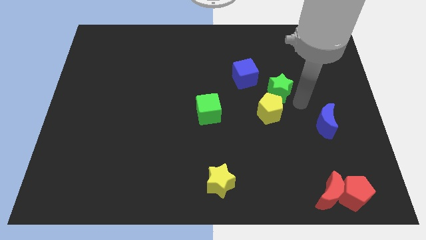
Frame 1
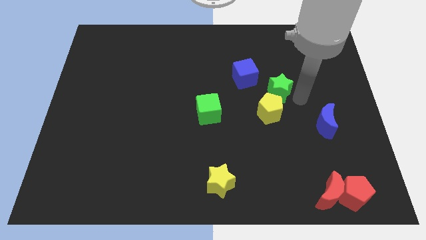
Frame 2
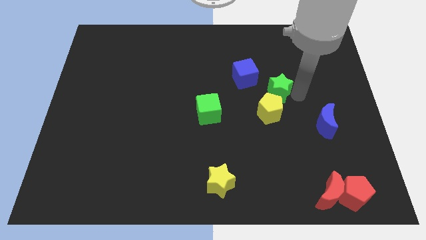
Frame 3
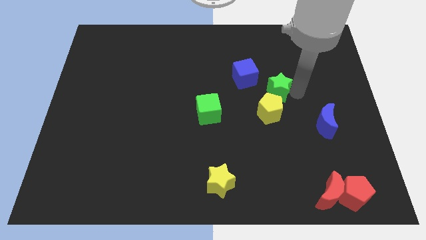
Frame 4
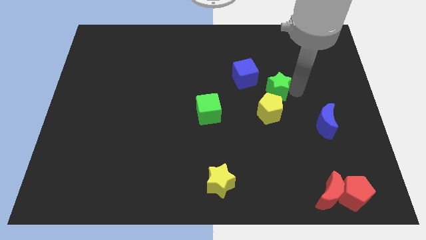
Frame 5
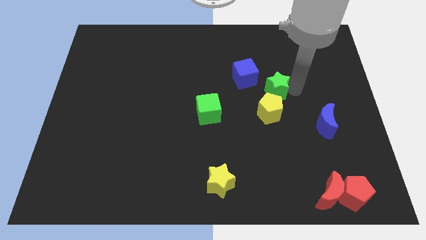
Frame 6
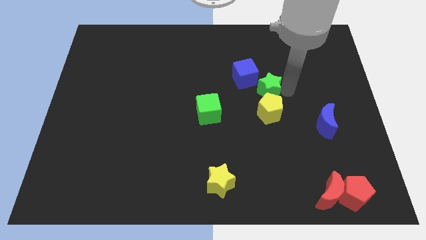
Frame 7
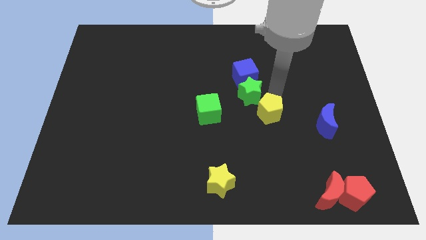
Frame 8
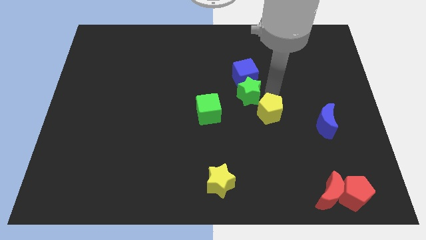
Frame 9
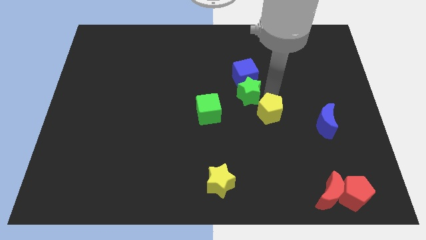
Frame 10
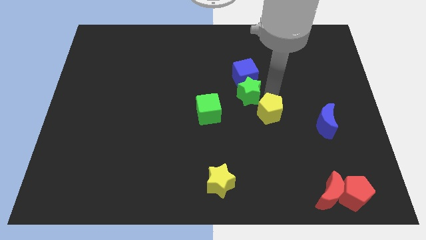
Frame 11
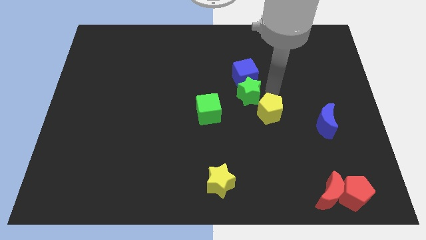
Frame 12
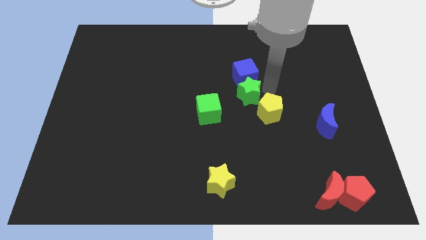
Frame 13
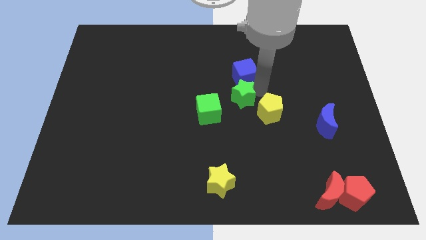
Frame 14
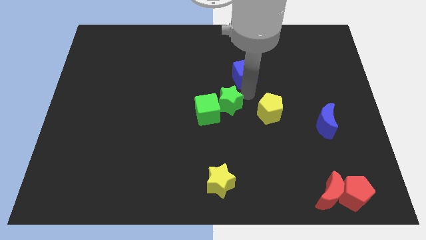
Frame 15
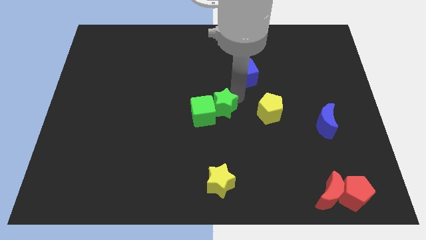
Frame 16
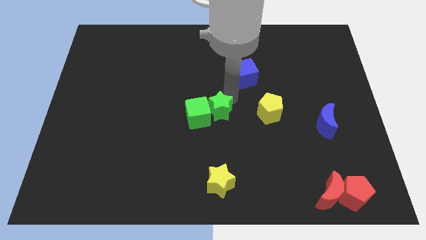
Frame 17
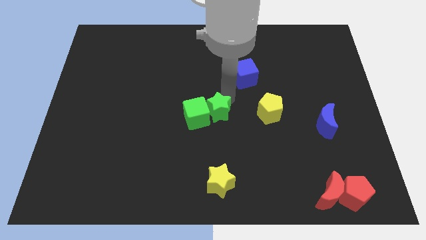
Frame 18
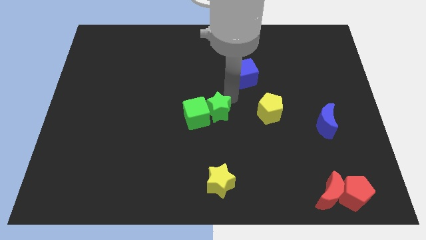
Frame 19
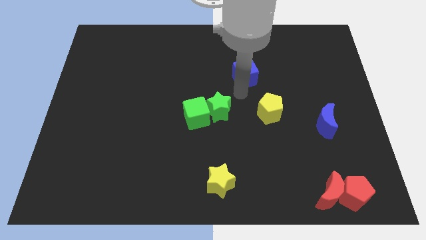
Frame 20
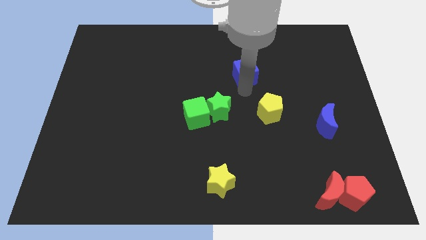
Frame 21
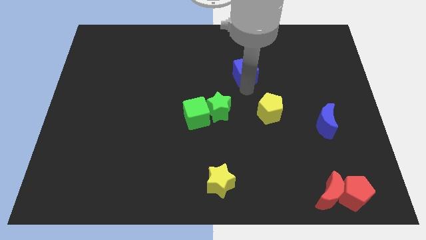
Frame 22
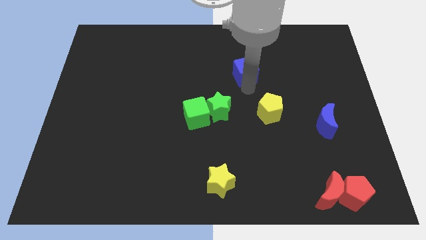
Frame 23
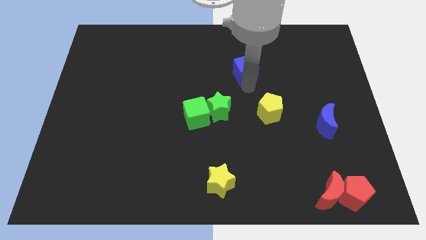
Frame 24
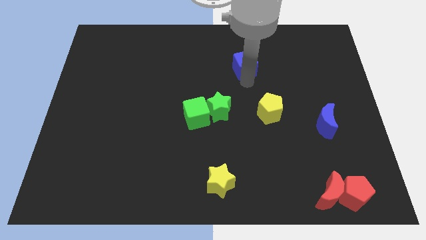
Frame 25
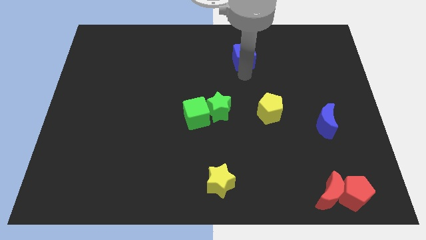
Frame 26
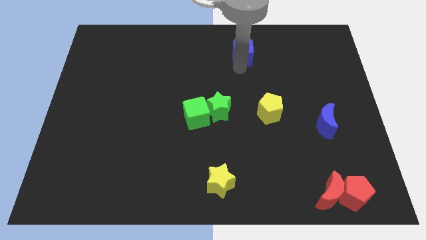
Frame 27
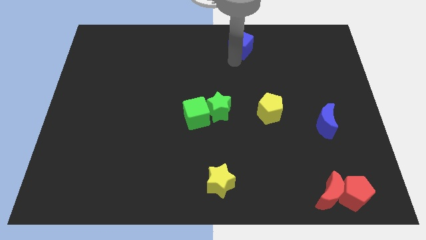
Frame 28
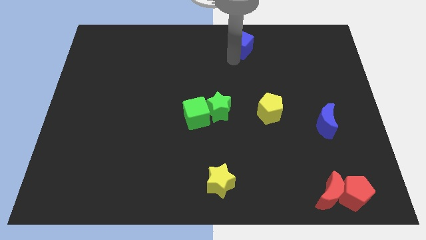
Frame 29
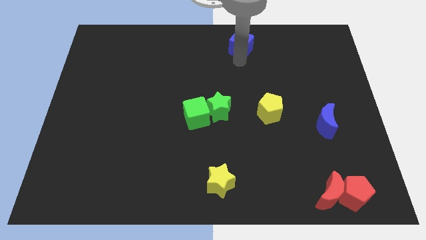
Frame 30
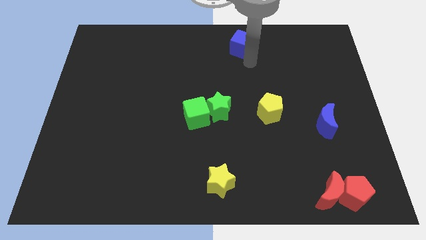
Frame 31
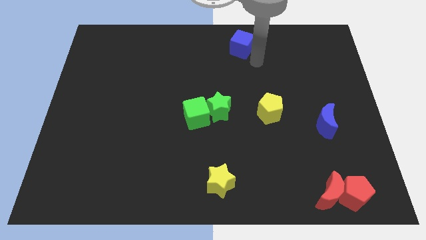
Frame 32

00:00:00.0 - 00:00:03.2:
push the green star close to the green cube

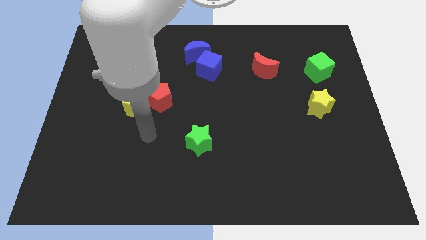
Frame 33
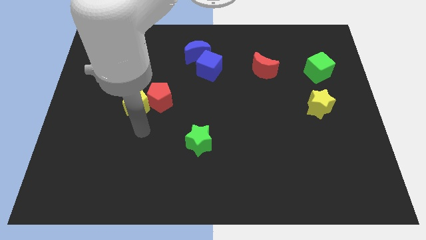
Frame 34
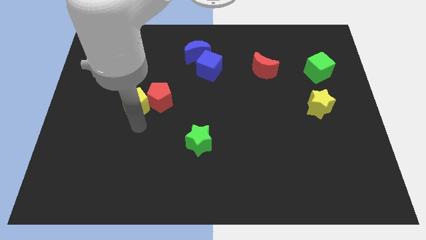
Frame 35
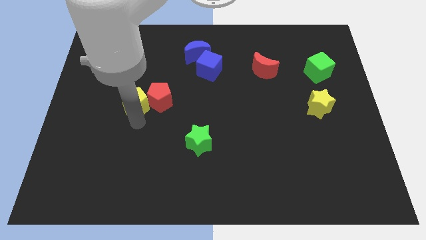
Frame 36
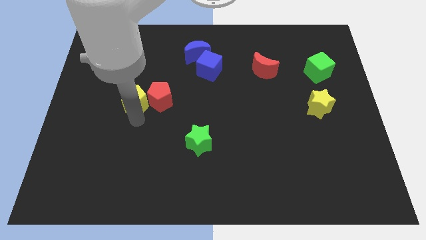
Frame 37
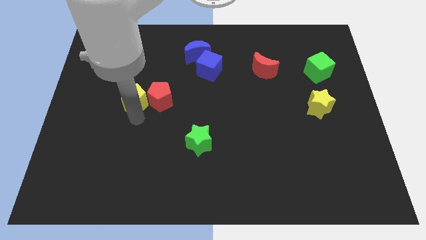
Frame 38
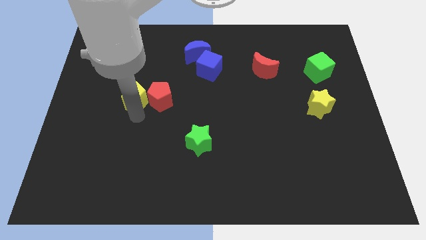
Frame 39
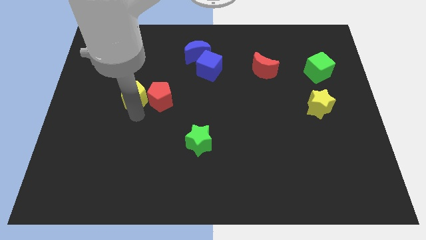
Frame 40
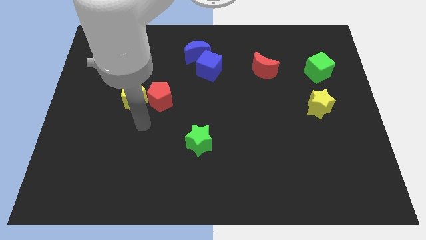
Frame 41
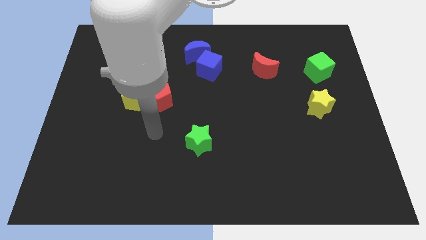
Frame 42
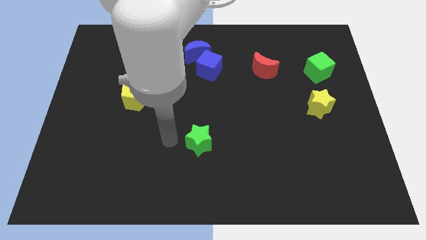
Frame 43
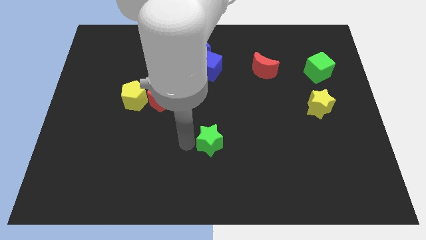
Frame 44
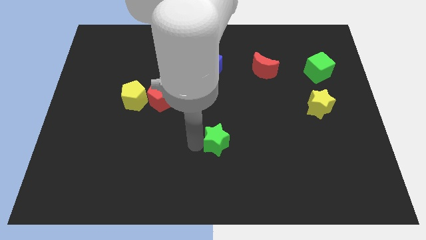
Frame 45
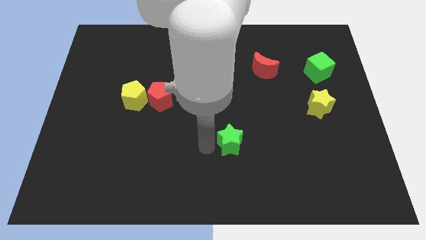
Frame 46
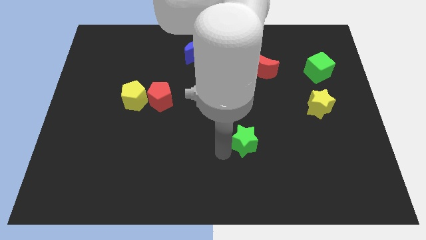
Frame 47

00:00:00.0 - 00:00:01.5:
slightly push the green star towards the right of the board

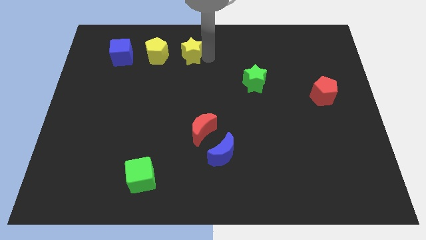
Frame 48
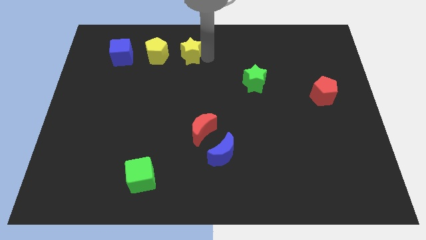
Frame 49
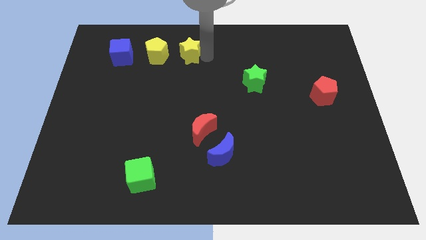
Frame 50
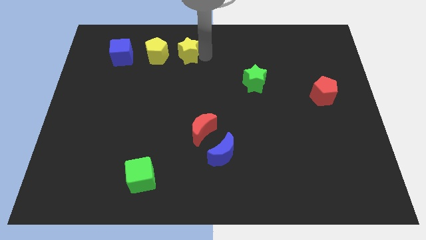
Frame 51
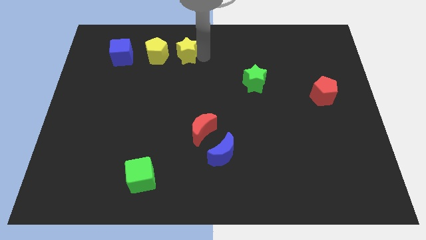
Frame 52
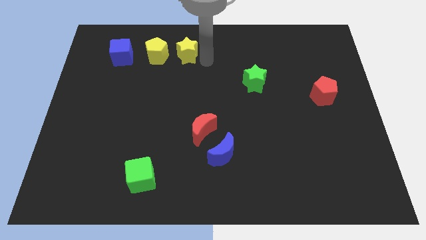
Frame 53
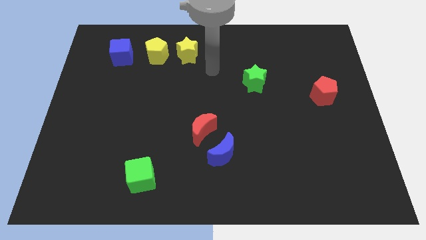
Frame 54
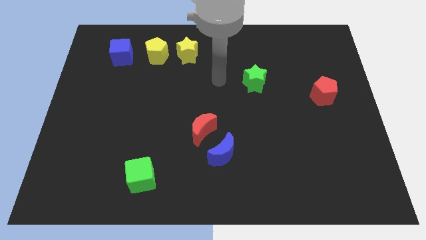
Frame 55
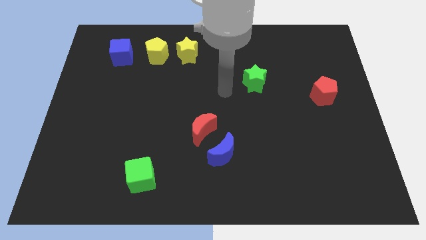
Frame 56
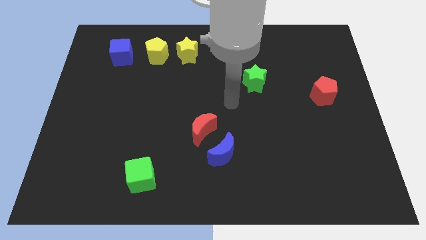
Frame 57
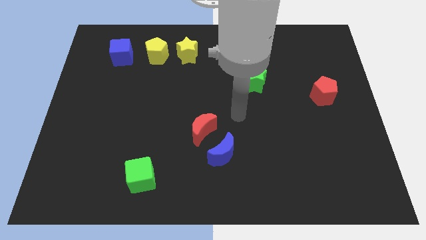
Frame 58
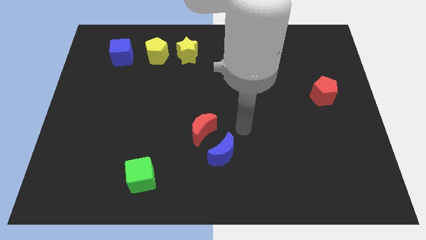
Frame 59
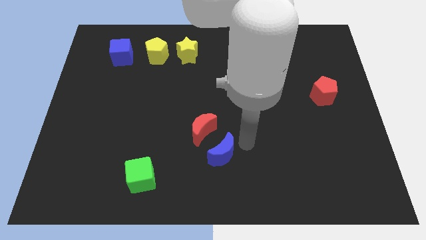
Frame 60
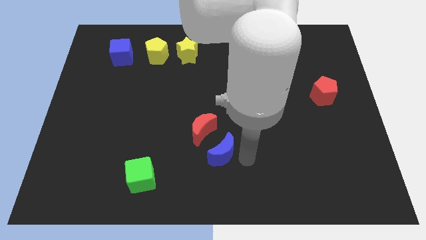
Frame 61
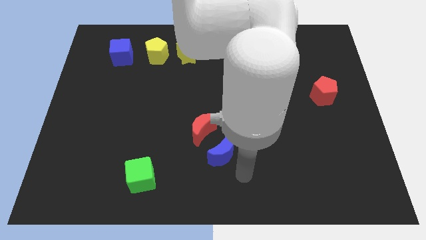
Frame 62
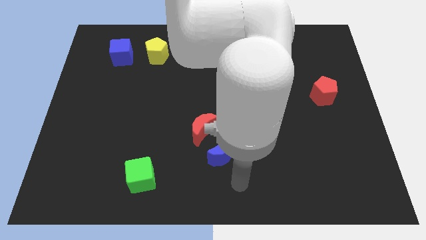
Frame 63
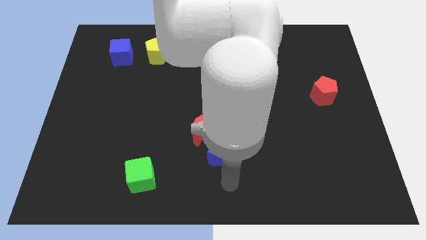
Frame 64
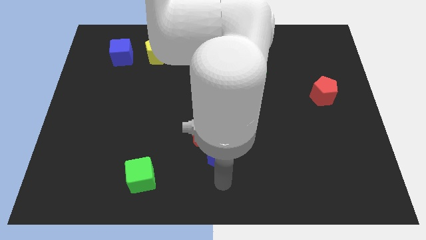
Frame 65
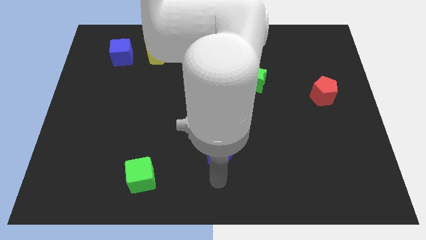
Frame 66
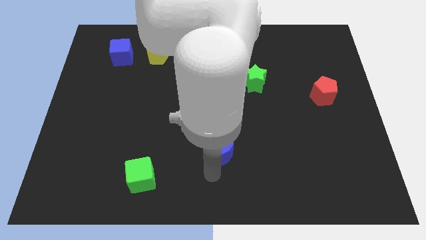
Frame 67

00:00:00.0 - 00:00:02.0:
move your arm towards the blue moon

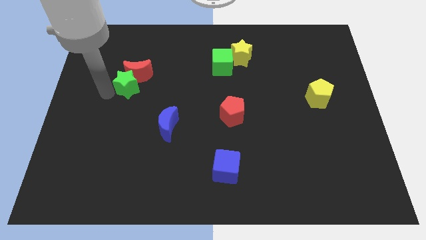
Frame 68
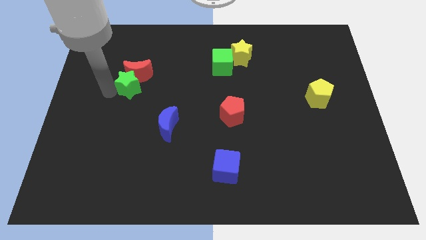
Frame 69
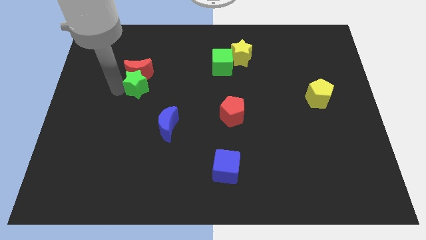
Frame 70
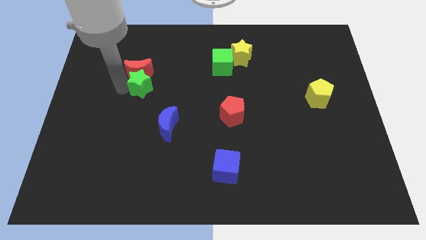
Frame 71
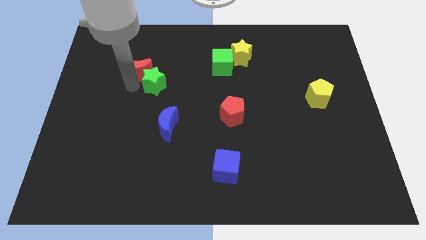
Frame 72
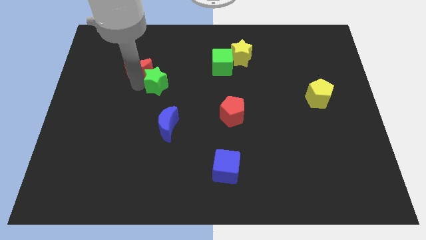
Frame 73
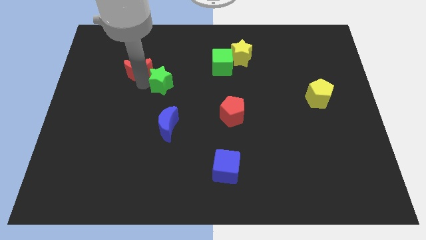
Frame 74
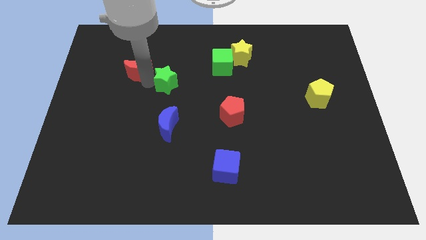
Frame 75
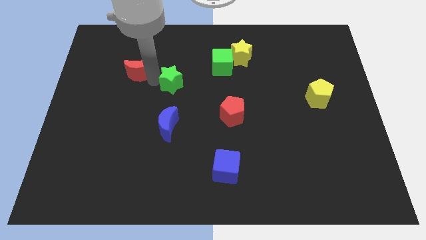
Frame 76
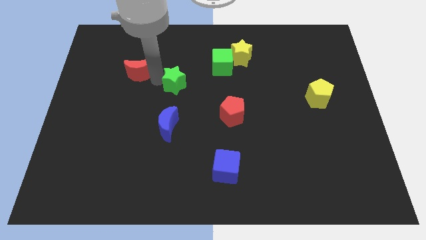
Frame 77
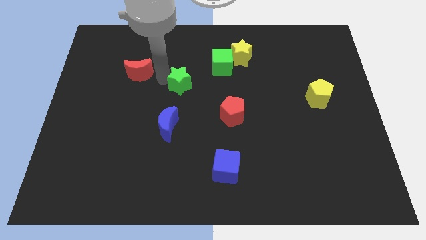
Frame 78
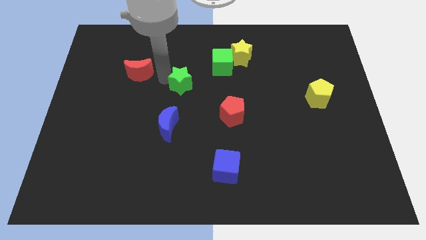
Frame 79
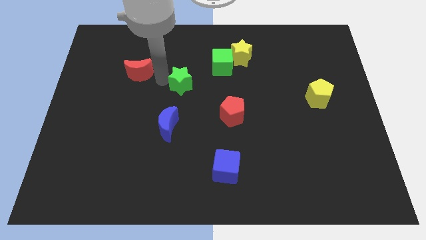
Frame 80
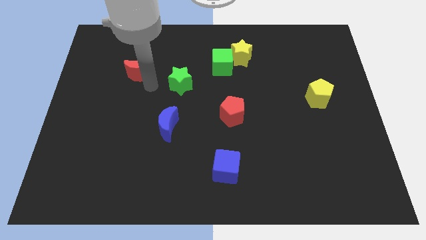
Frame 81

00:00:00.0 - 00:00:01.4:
separate the green star away from the red crescent

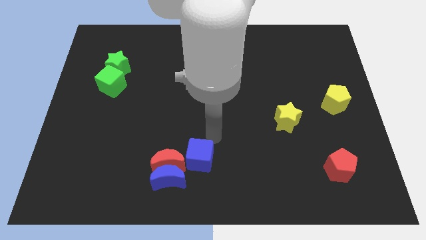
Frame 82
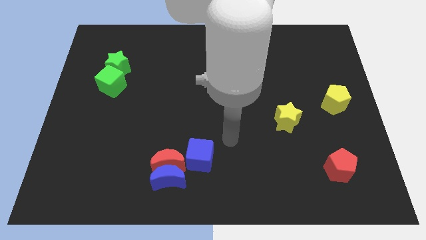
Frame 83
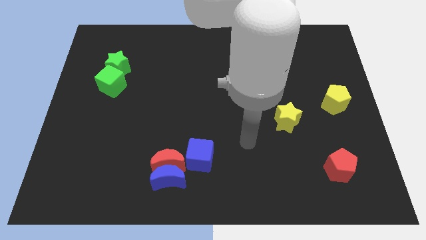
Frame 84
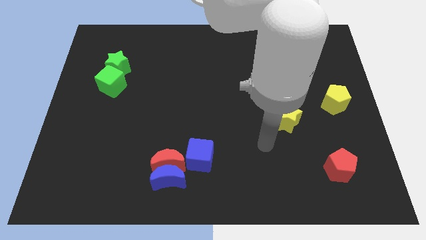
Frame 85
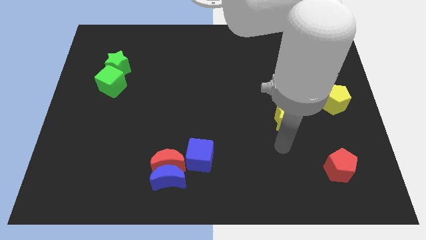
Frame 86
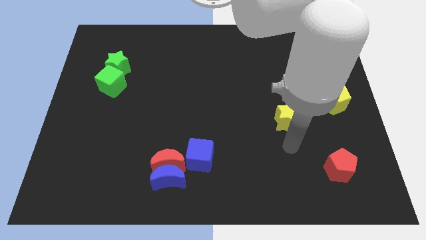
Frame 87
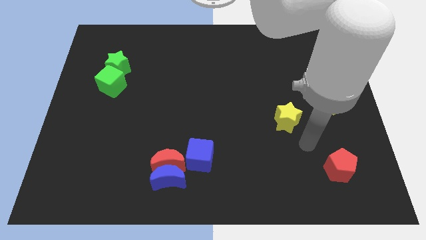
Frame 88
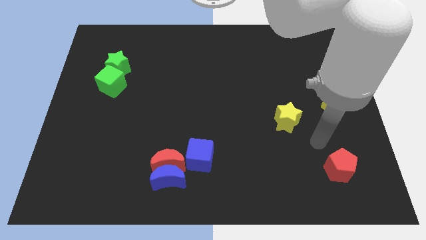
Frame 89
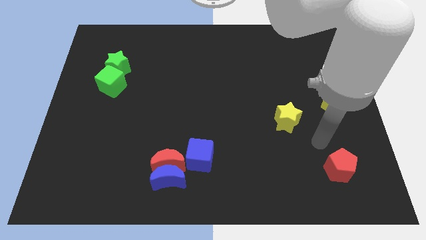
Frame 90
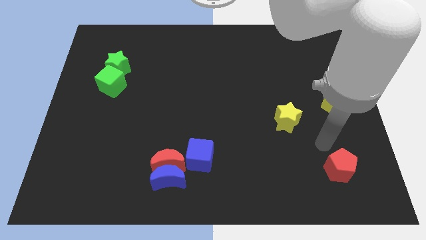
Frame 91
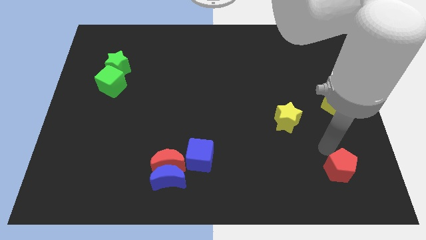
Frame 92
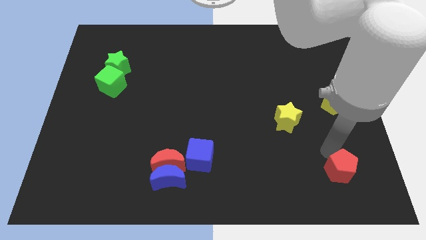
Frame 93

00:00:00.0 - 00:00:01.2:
move your arm horizontally towards the red pentagon
